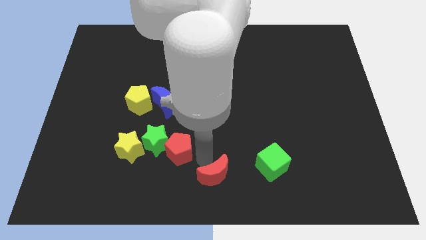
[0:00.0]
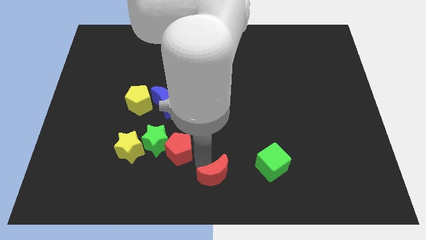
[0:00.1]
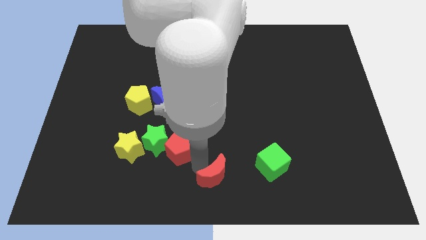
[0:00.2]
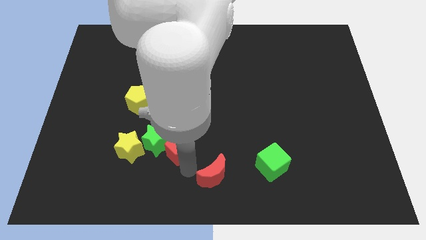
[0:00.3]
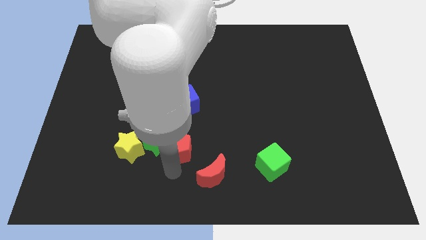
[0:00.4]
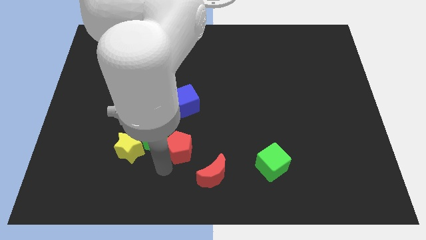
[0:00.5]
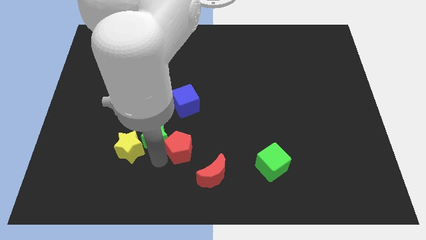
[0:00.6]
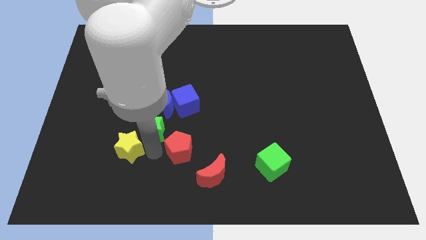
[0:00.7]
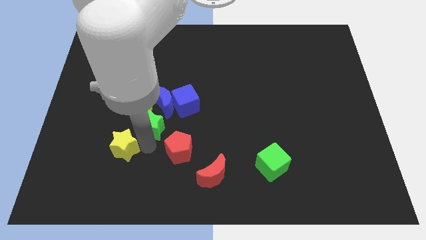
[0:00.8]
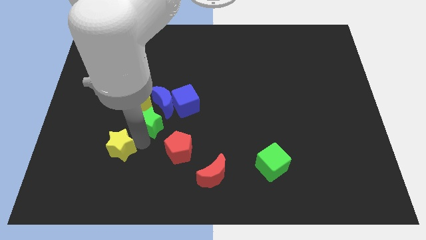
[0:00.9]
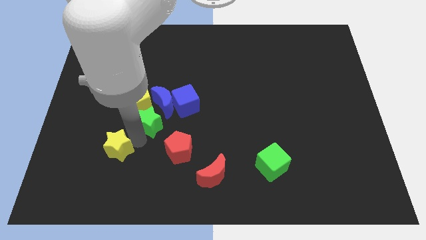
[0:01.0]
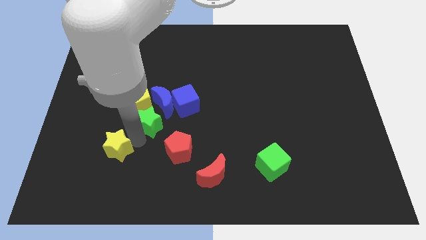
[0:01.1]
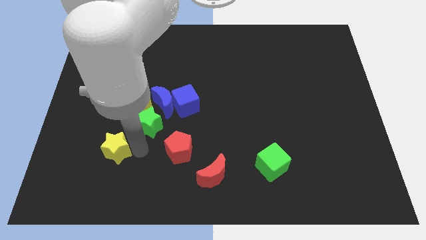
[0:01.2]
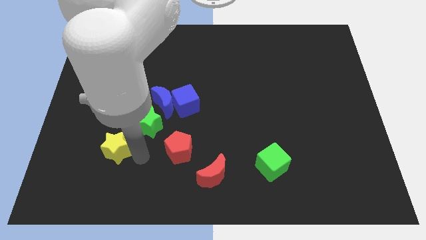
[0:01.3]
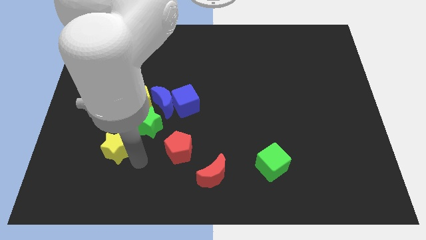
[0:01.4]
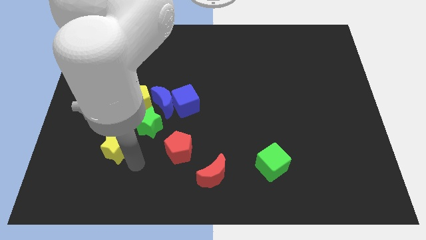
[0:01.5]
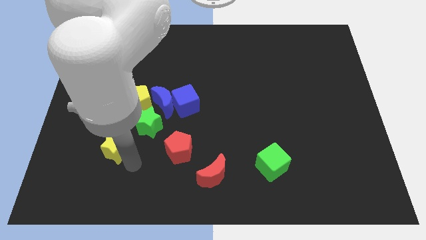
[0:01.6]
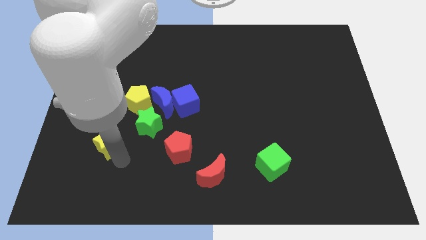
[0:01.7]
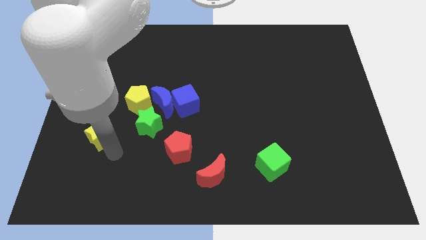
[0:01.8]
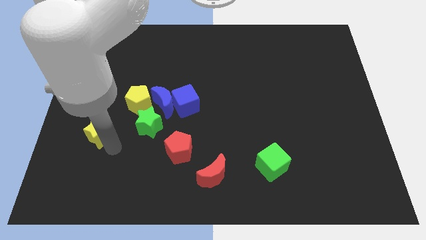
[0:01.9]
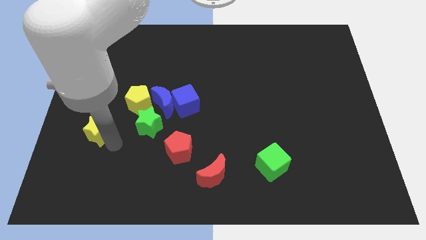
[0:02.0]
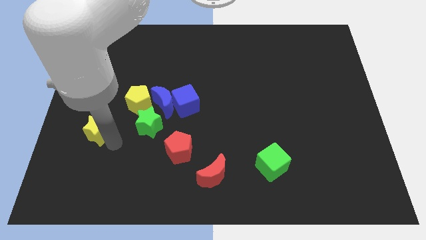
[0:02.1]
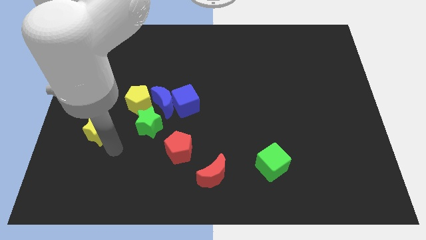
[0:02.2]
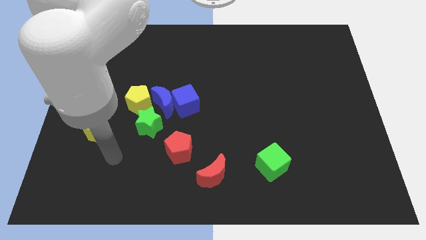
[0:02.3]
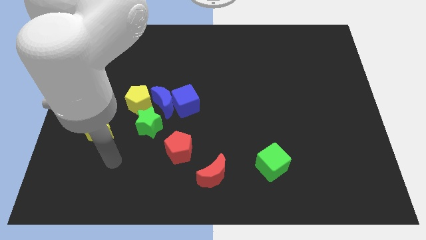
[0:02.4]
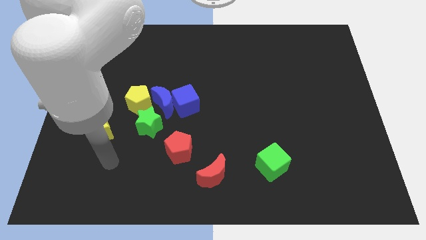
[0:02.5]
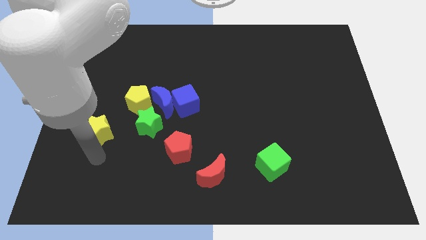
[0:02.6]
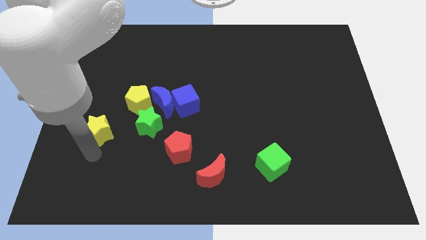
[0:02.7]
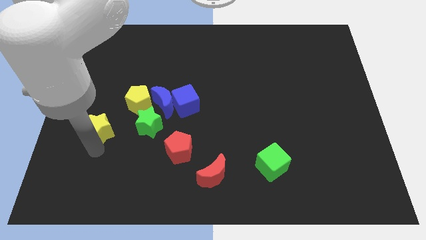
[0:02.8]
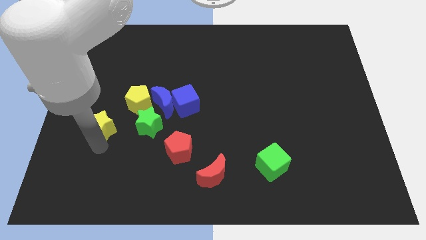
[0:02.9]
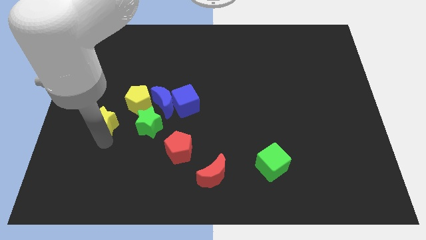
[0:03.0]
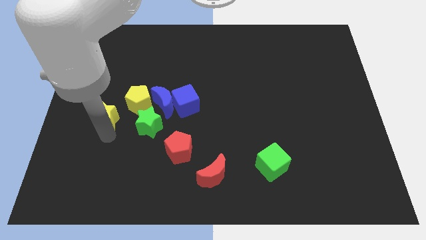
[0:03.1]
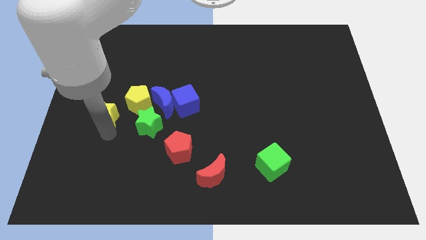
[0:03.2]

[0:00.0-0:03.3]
push the green star and yellow star towards the yellow pentagon

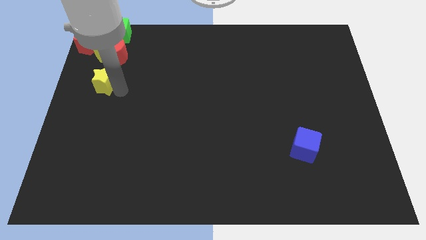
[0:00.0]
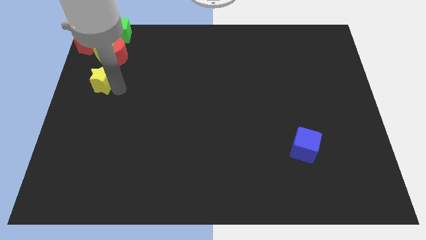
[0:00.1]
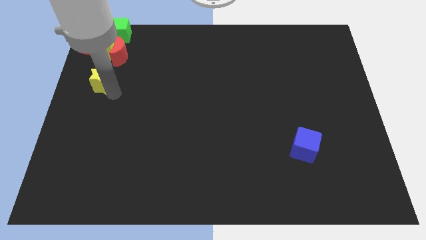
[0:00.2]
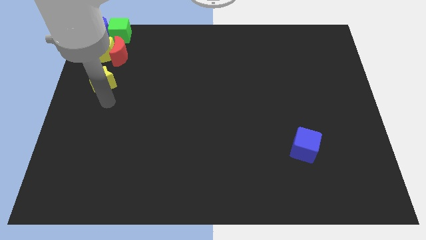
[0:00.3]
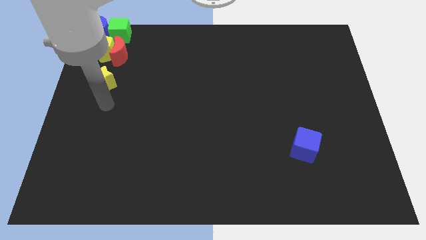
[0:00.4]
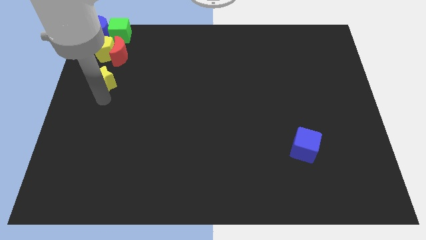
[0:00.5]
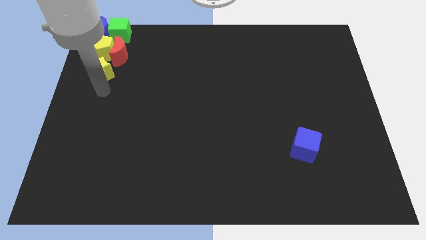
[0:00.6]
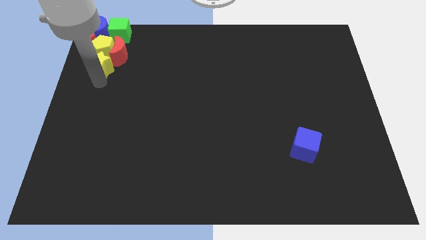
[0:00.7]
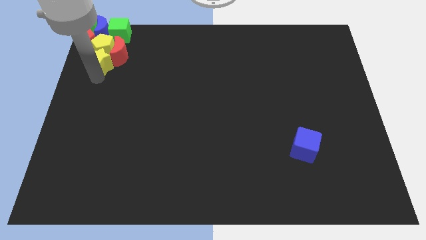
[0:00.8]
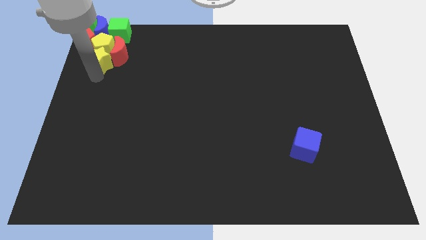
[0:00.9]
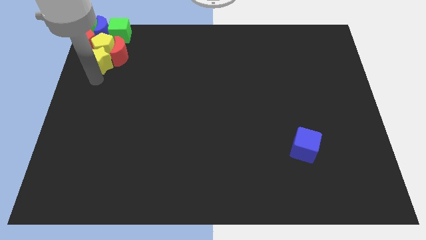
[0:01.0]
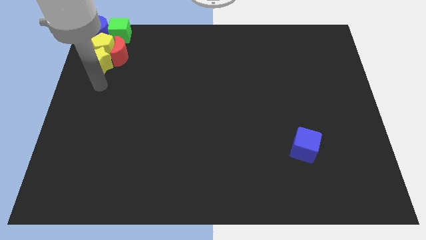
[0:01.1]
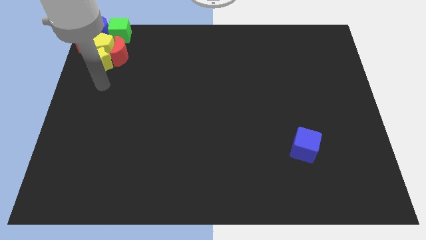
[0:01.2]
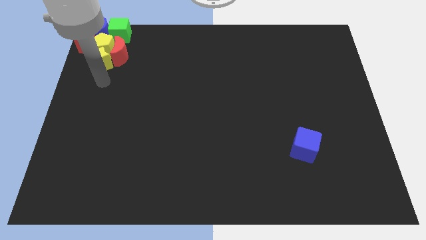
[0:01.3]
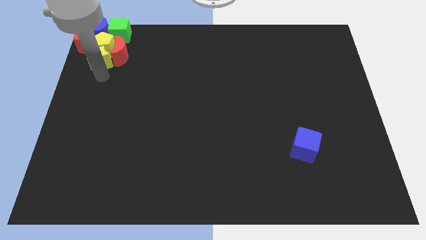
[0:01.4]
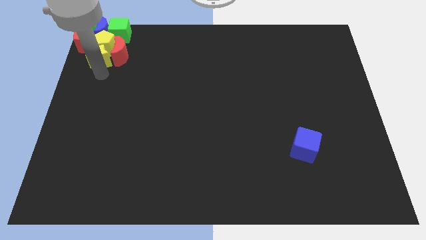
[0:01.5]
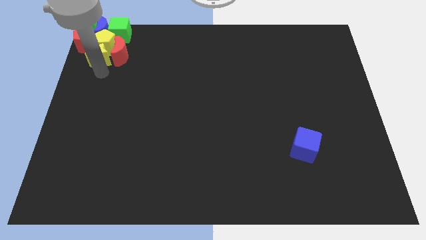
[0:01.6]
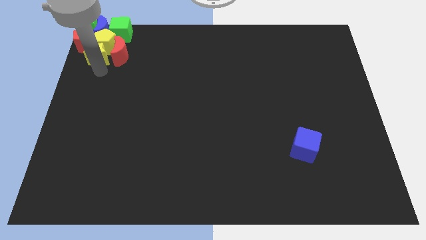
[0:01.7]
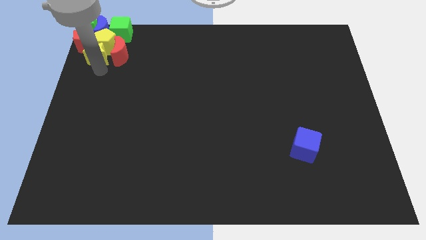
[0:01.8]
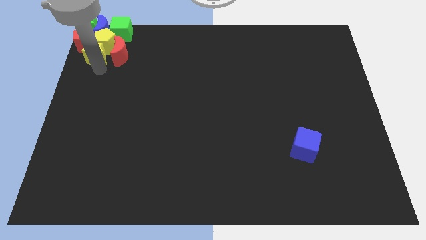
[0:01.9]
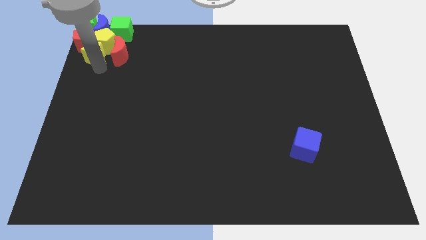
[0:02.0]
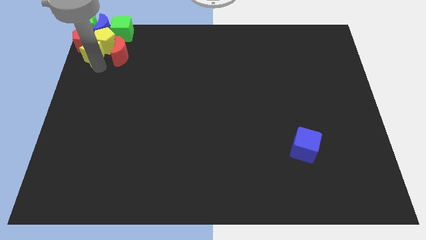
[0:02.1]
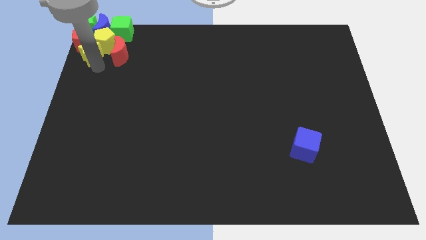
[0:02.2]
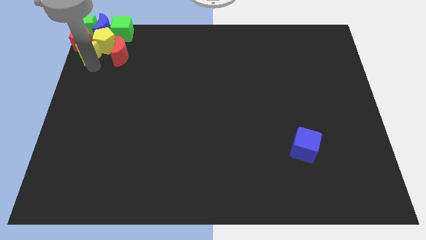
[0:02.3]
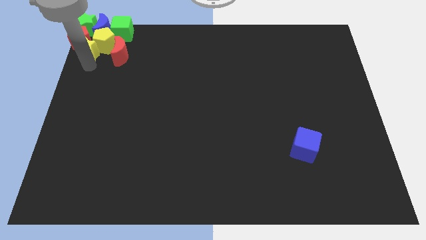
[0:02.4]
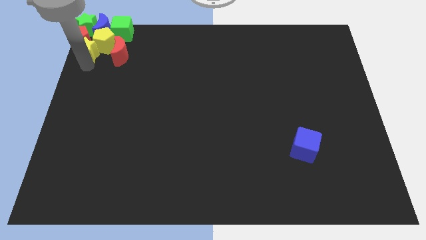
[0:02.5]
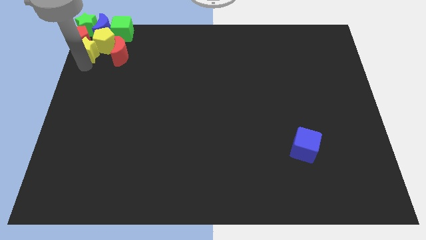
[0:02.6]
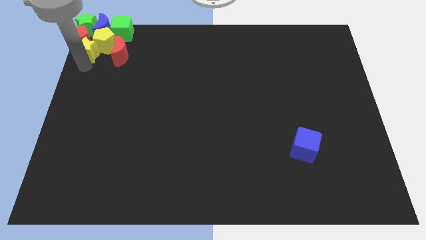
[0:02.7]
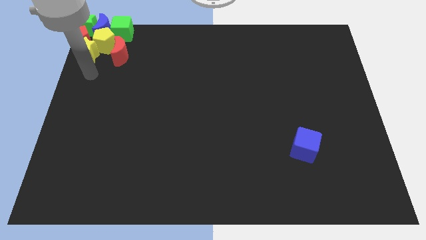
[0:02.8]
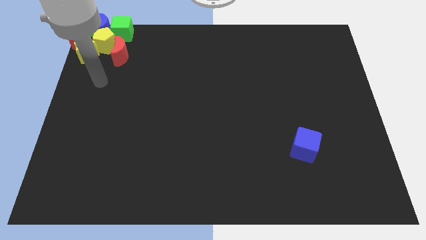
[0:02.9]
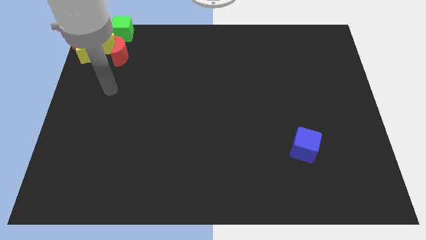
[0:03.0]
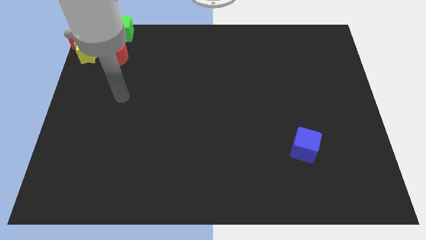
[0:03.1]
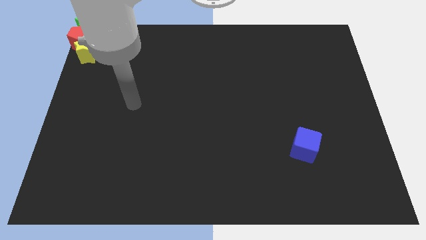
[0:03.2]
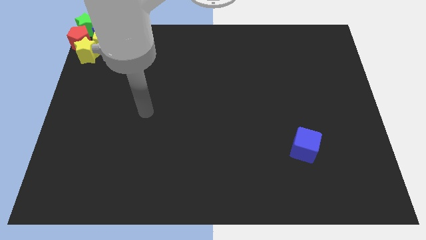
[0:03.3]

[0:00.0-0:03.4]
push the yellow star between the red and yellow pentagon

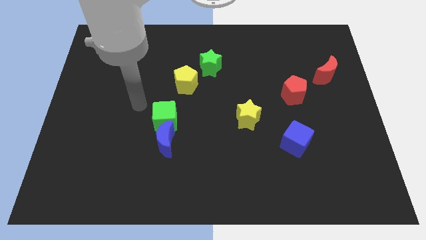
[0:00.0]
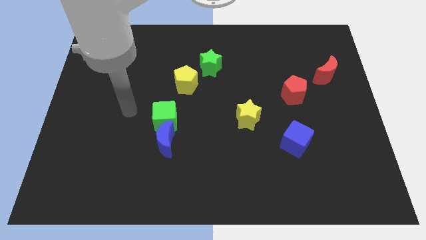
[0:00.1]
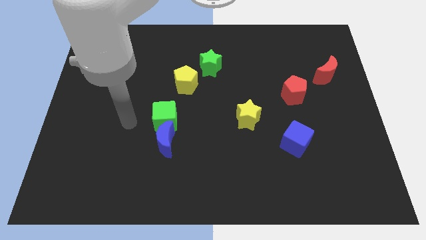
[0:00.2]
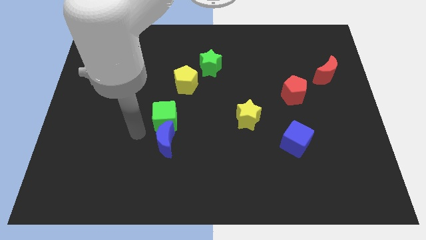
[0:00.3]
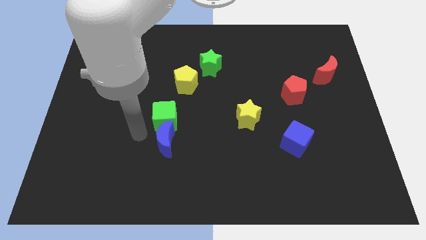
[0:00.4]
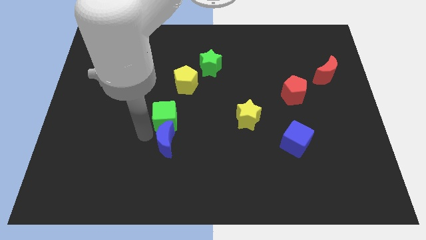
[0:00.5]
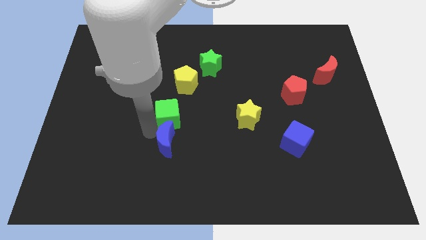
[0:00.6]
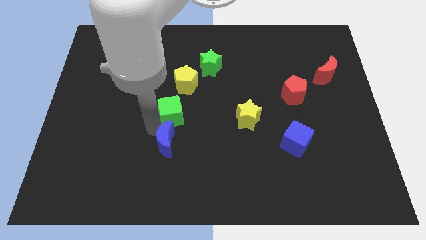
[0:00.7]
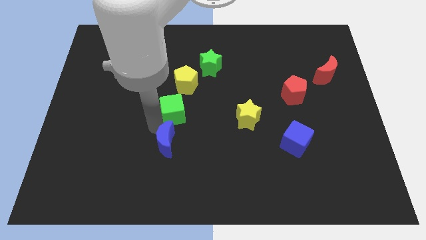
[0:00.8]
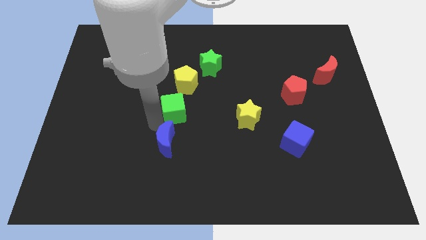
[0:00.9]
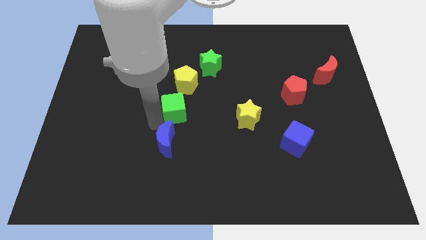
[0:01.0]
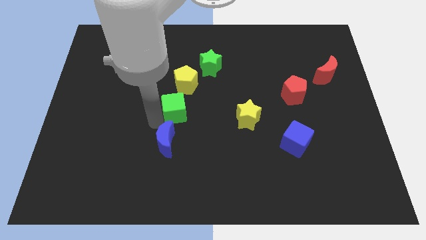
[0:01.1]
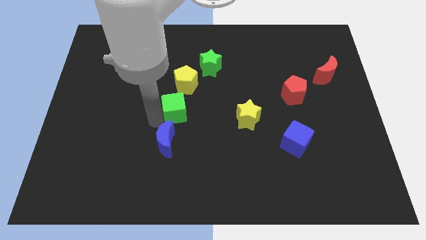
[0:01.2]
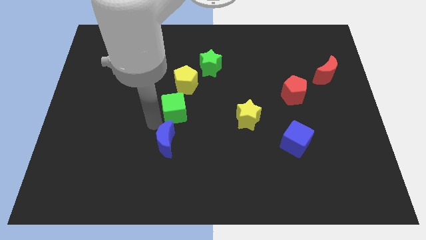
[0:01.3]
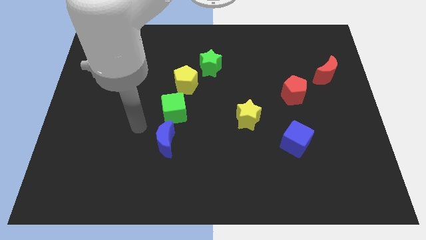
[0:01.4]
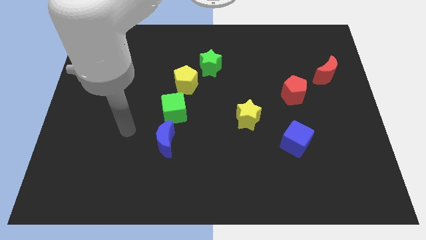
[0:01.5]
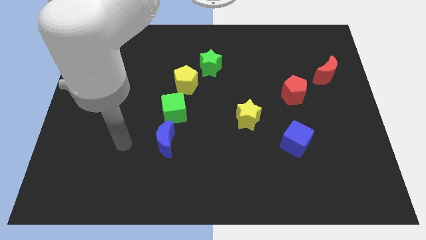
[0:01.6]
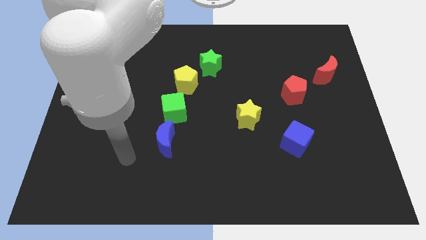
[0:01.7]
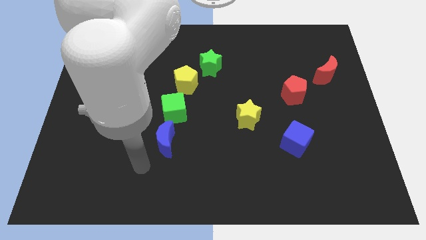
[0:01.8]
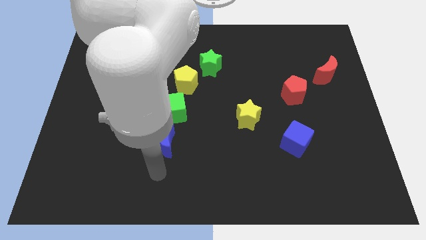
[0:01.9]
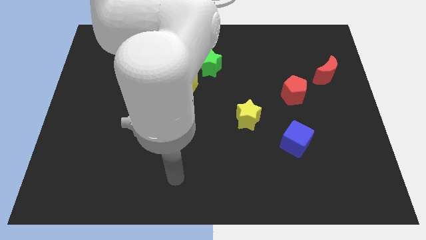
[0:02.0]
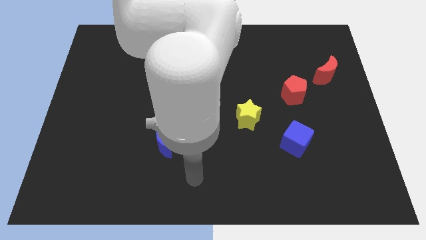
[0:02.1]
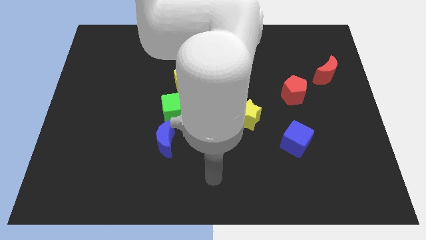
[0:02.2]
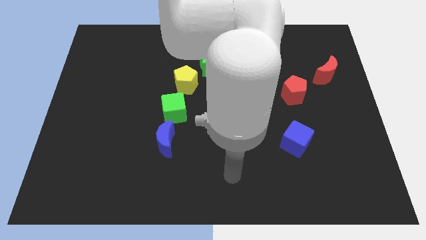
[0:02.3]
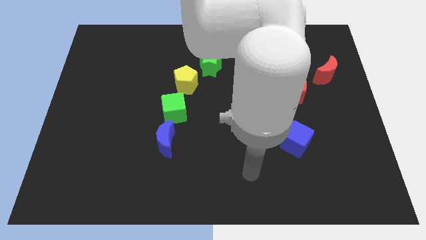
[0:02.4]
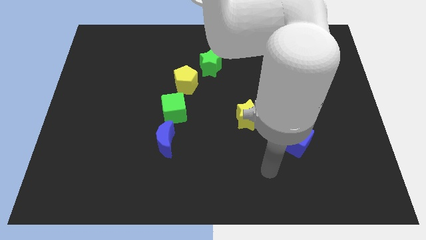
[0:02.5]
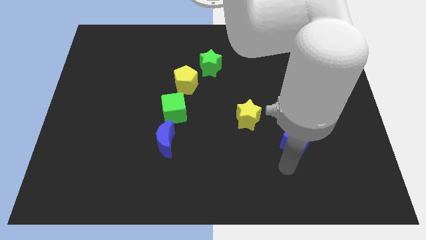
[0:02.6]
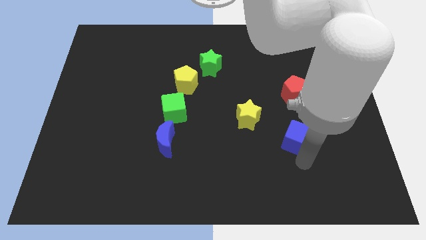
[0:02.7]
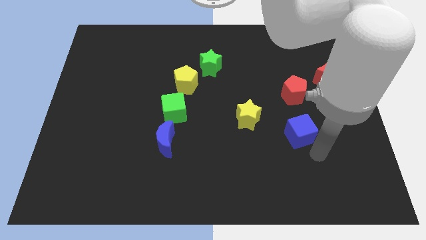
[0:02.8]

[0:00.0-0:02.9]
move your arm towards the blue cube
